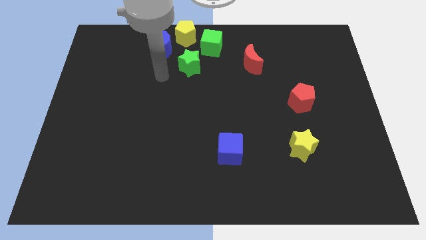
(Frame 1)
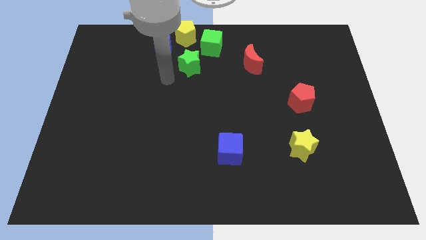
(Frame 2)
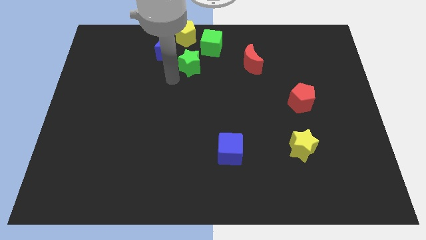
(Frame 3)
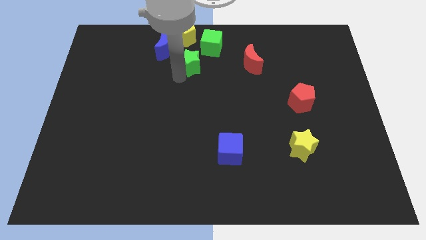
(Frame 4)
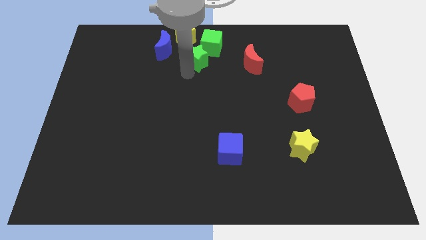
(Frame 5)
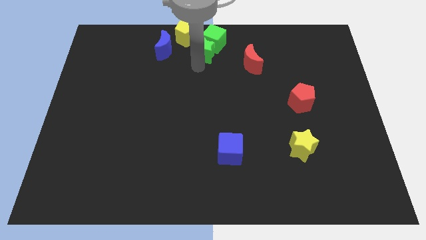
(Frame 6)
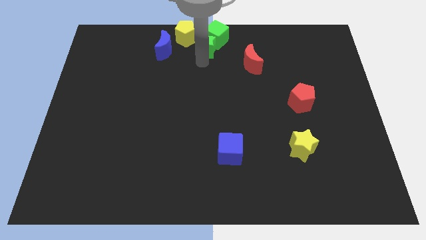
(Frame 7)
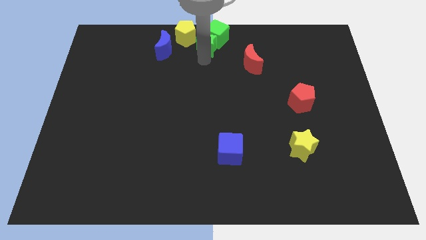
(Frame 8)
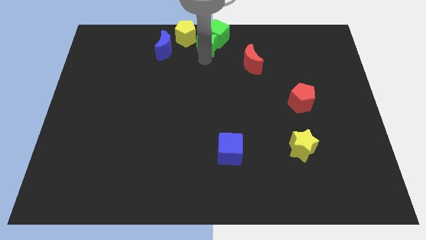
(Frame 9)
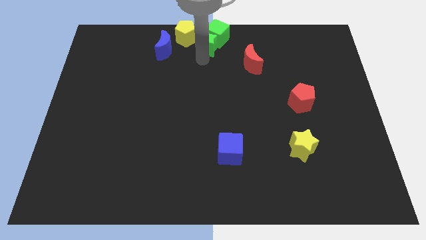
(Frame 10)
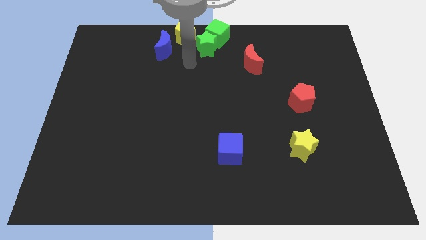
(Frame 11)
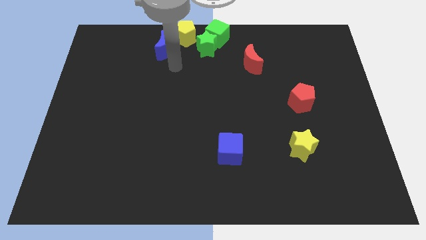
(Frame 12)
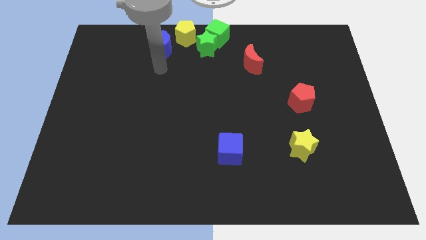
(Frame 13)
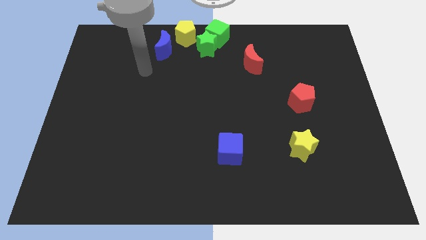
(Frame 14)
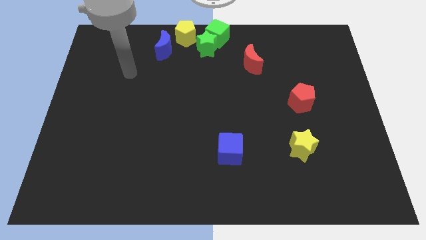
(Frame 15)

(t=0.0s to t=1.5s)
move the green star and cube to the top center of the board

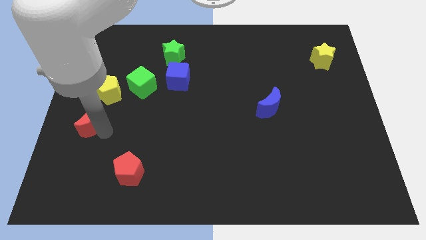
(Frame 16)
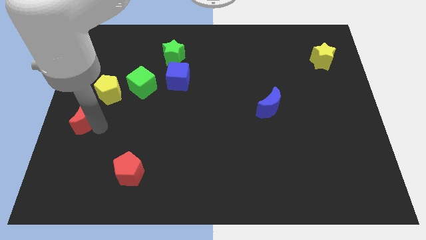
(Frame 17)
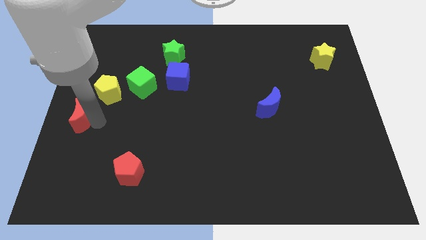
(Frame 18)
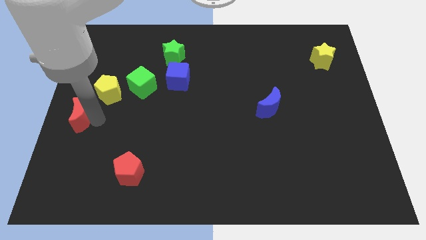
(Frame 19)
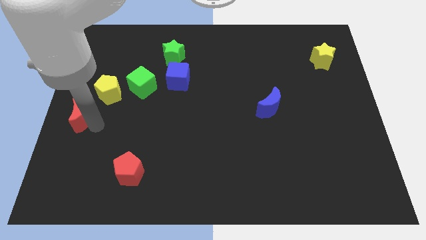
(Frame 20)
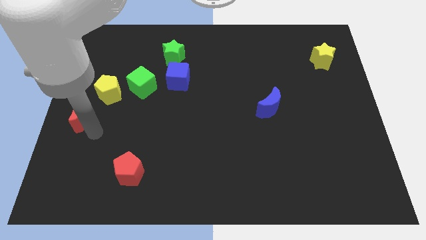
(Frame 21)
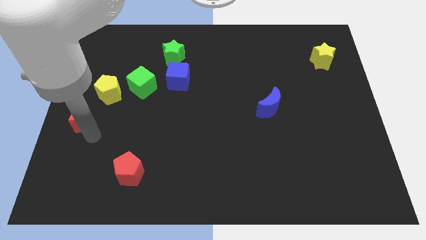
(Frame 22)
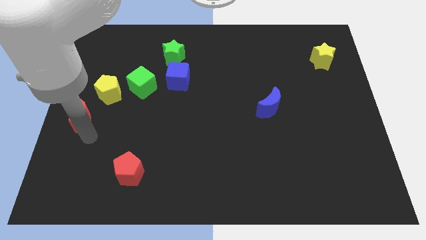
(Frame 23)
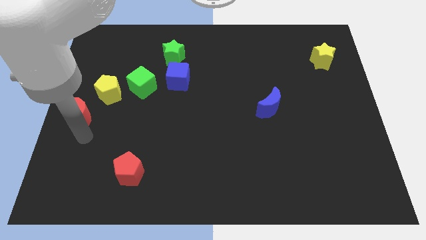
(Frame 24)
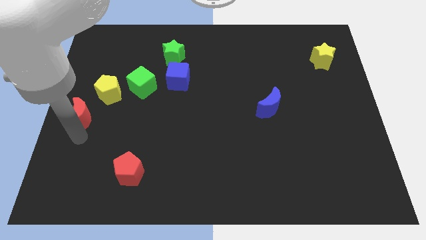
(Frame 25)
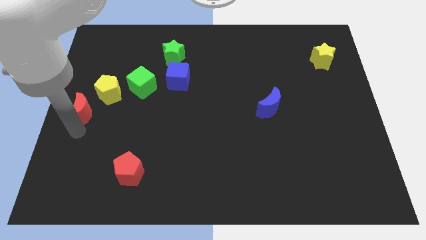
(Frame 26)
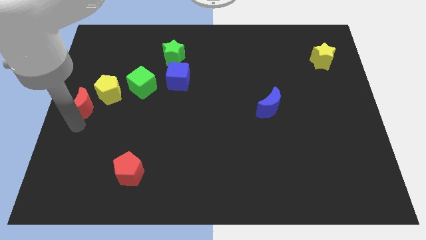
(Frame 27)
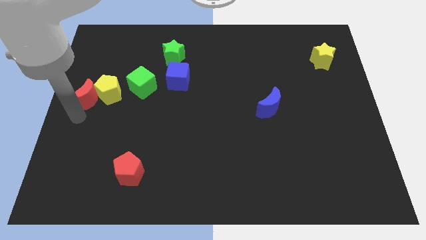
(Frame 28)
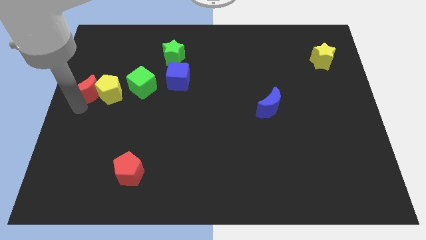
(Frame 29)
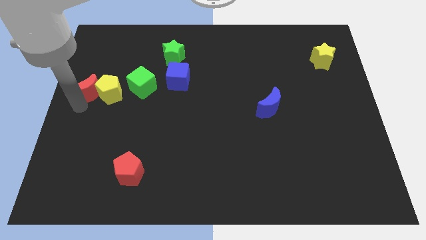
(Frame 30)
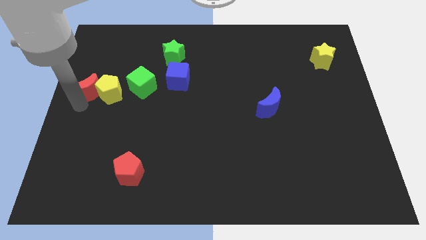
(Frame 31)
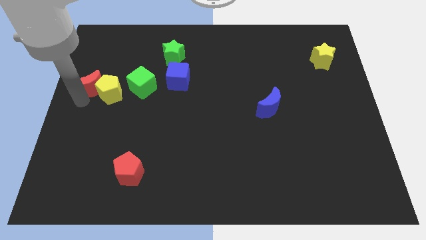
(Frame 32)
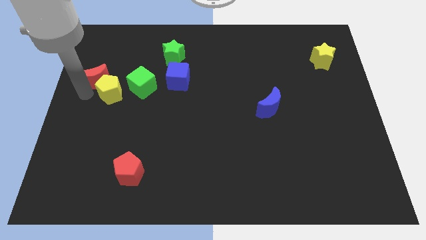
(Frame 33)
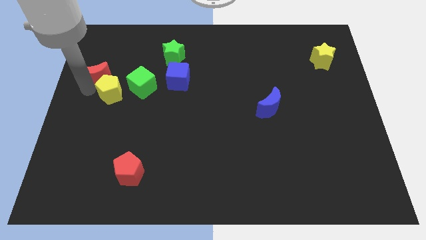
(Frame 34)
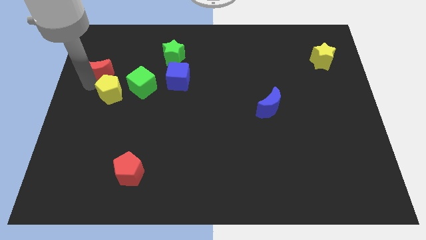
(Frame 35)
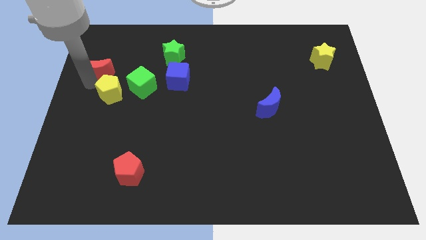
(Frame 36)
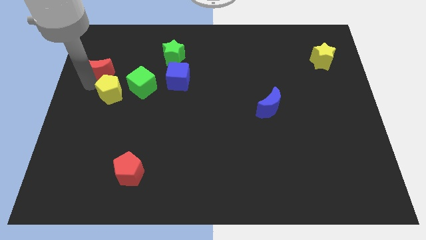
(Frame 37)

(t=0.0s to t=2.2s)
place the red moon to the top left of the yellow pentagon

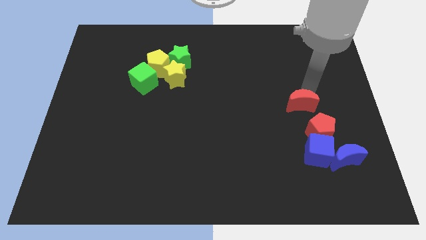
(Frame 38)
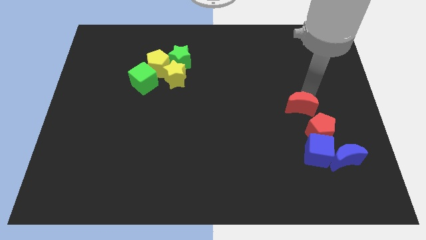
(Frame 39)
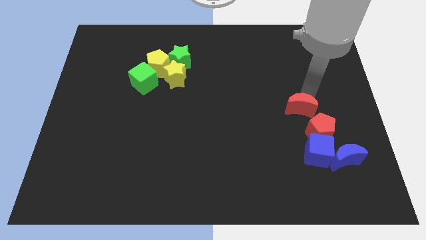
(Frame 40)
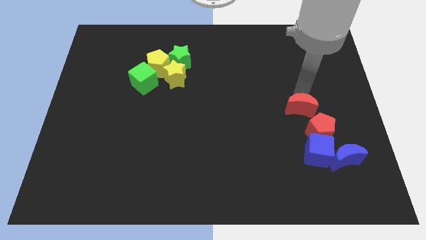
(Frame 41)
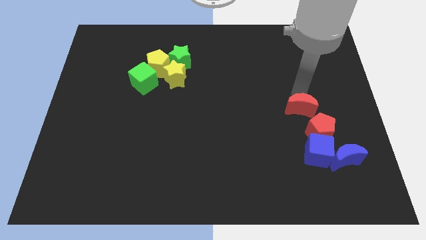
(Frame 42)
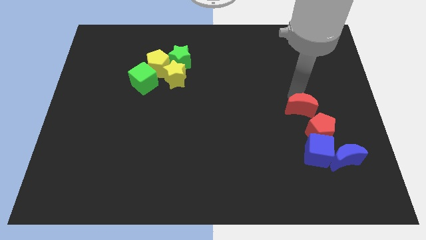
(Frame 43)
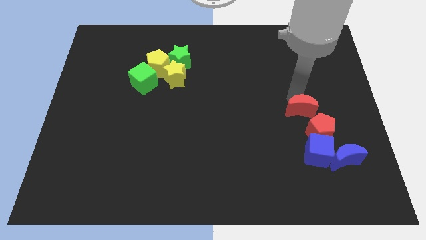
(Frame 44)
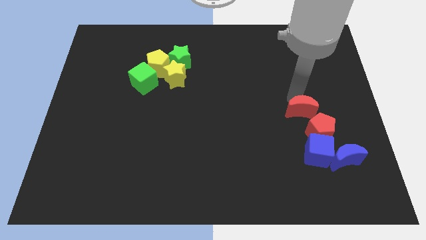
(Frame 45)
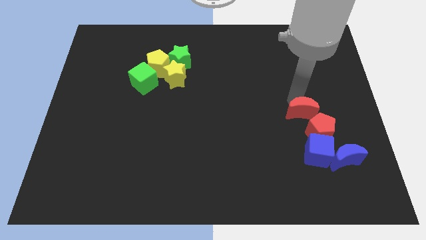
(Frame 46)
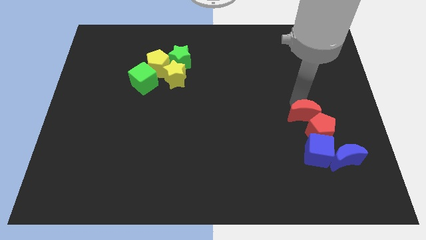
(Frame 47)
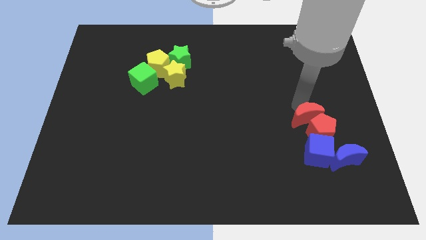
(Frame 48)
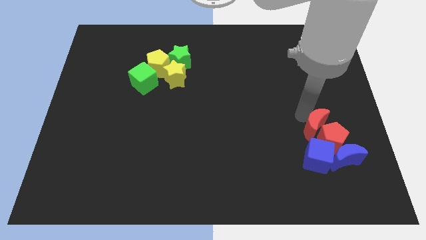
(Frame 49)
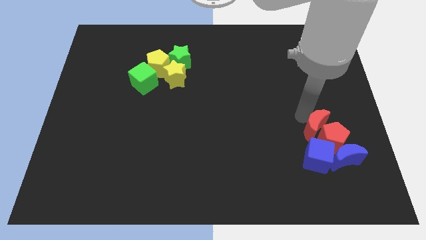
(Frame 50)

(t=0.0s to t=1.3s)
place the red moon above the red pentagon

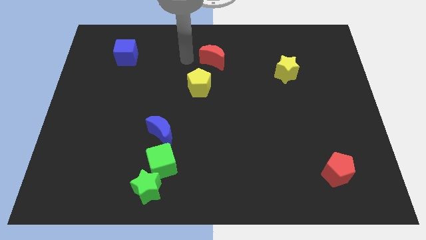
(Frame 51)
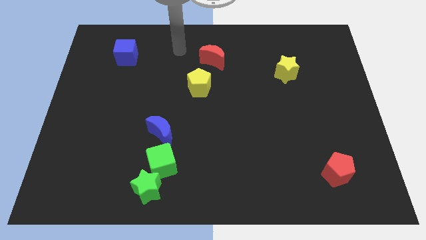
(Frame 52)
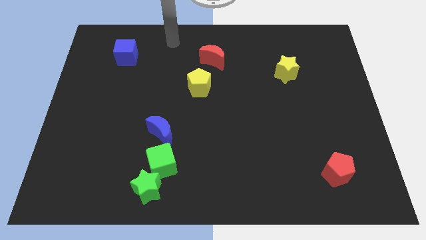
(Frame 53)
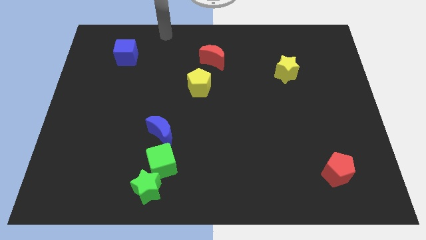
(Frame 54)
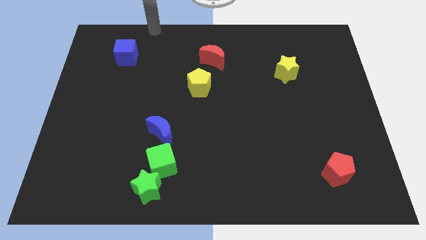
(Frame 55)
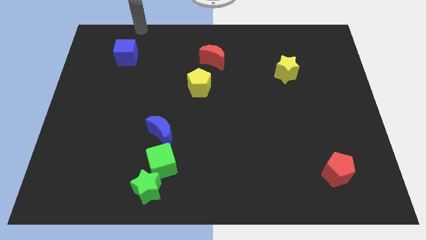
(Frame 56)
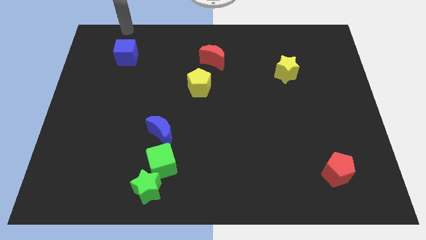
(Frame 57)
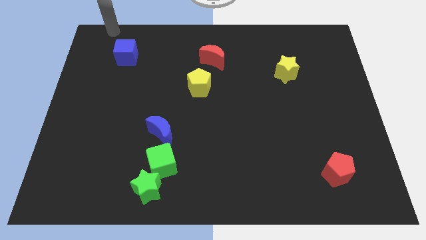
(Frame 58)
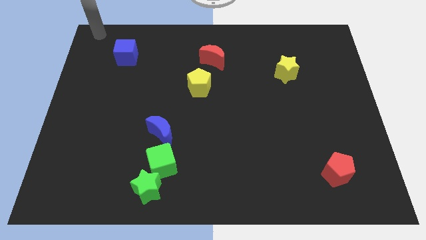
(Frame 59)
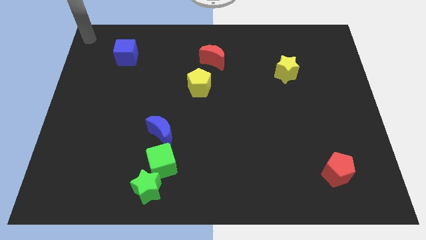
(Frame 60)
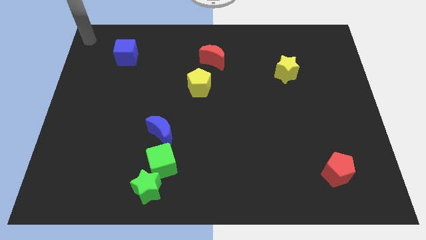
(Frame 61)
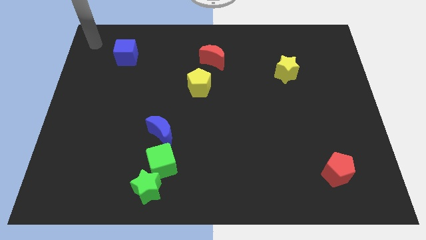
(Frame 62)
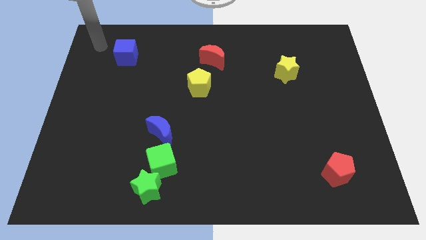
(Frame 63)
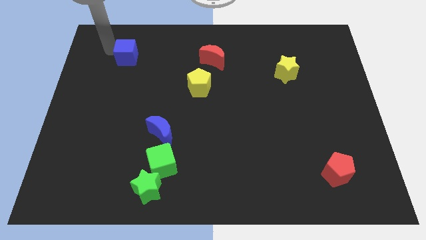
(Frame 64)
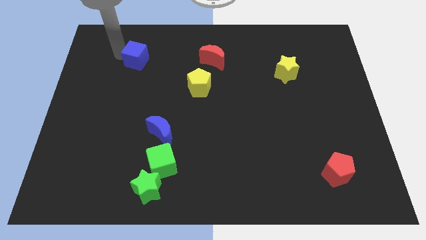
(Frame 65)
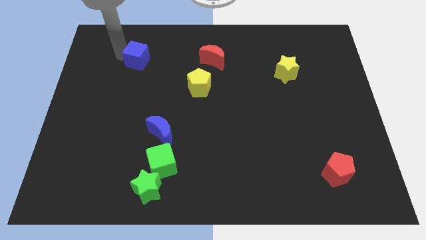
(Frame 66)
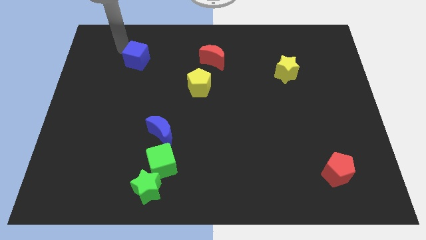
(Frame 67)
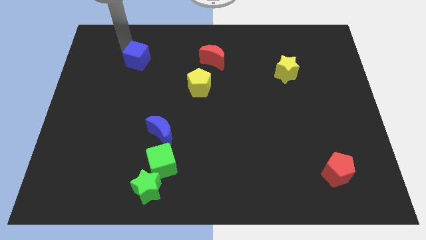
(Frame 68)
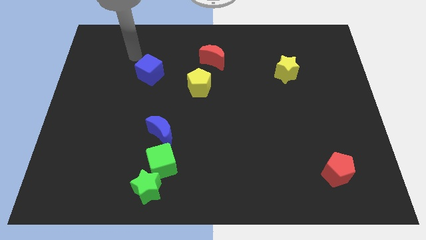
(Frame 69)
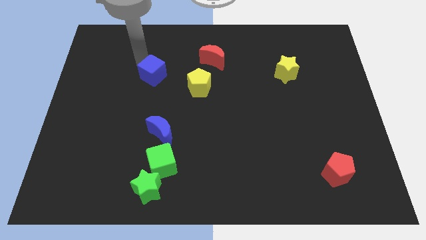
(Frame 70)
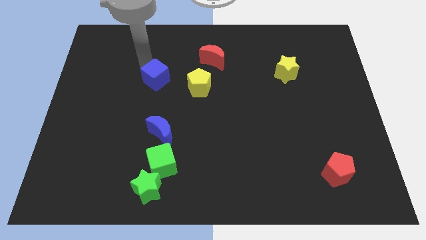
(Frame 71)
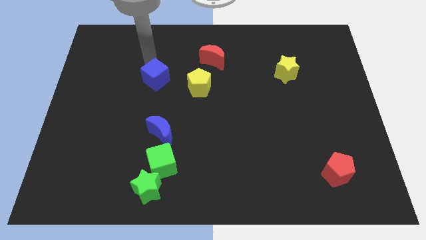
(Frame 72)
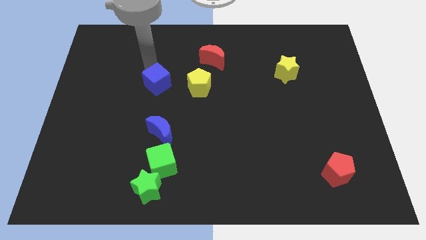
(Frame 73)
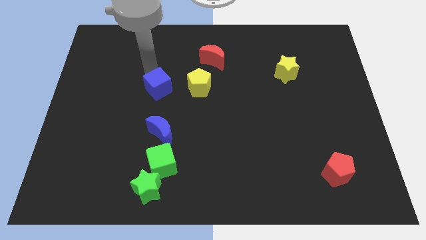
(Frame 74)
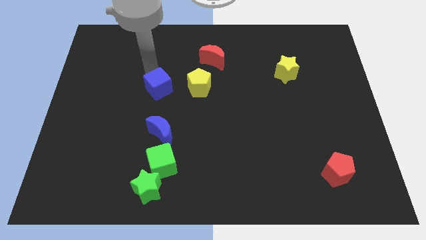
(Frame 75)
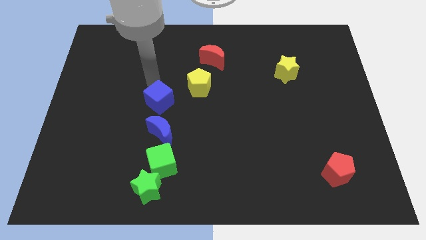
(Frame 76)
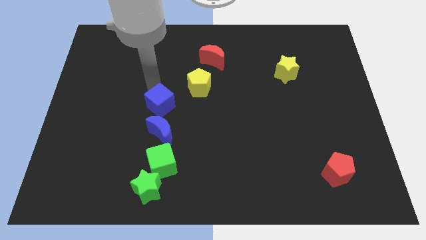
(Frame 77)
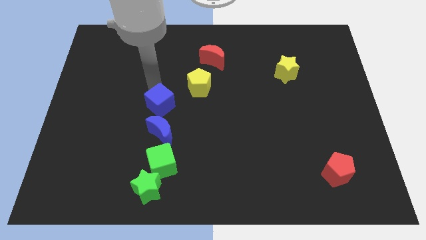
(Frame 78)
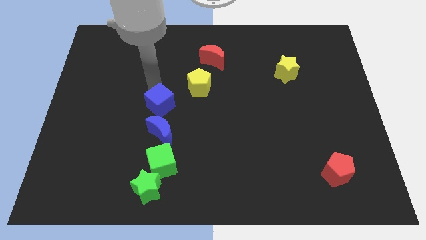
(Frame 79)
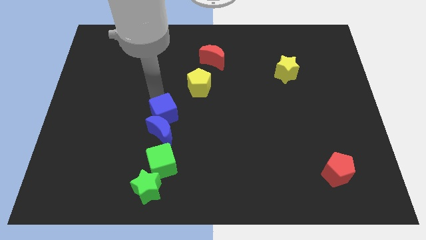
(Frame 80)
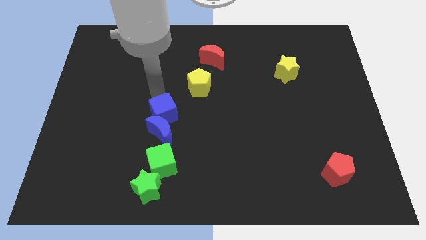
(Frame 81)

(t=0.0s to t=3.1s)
make the blue cube to touch the top side of the blue crescent

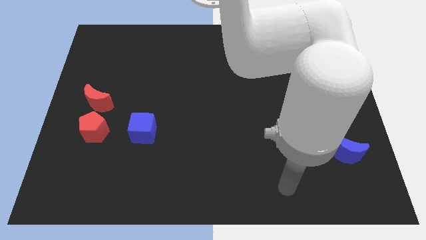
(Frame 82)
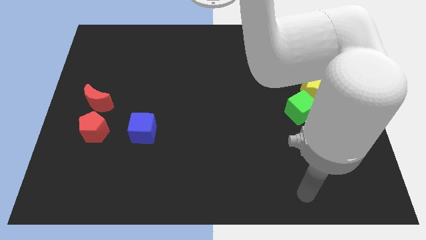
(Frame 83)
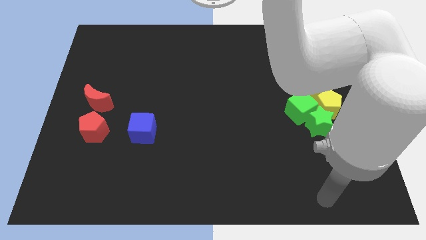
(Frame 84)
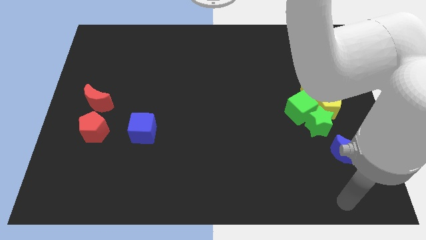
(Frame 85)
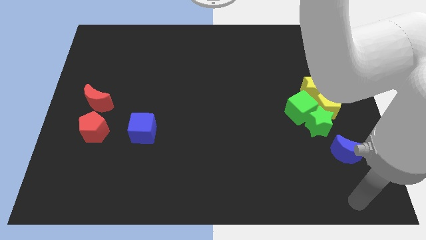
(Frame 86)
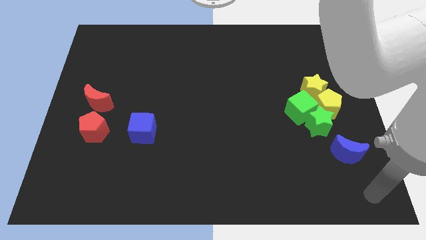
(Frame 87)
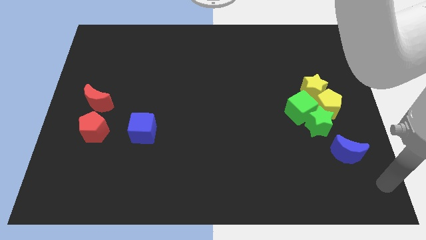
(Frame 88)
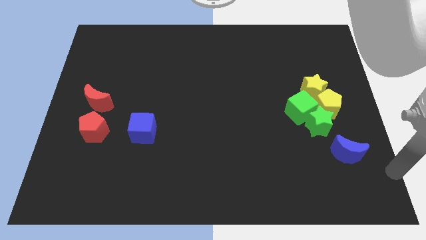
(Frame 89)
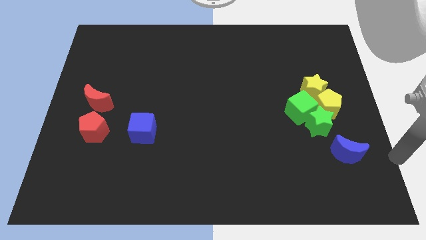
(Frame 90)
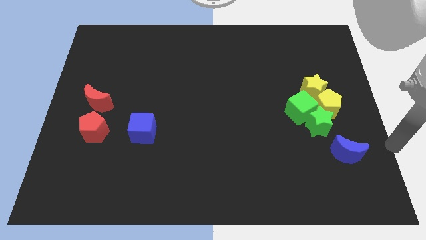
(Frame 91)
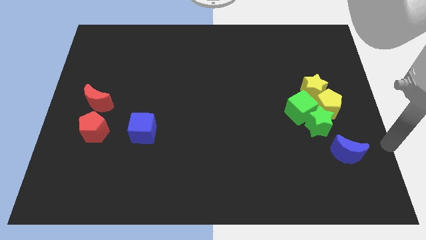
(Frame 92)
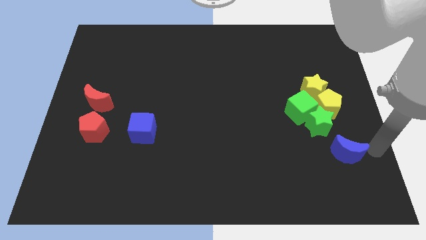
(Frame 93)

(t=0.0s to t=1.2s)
move your arm right to the blue crescent
